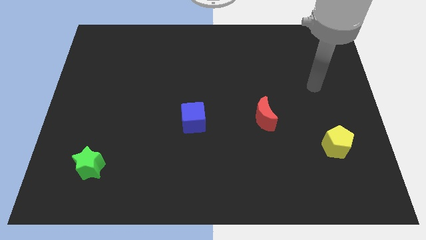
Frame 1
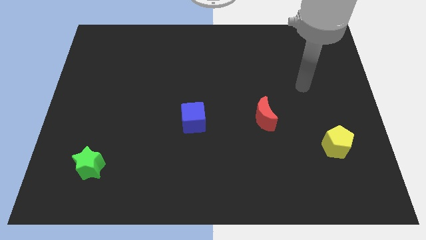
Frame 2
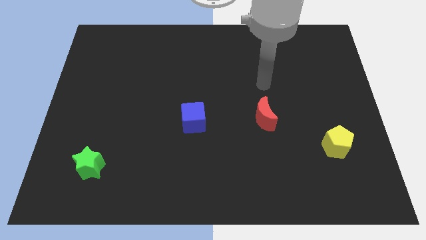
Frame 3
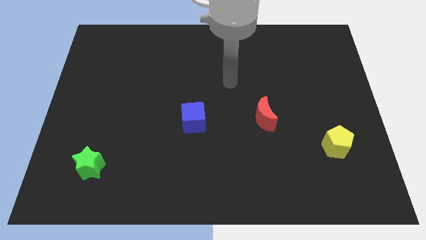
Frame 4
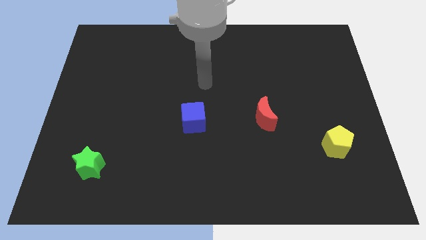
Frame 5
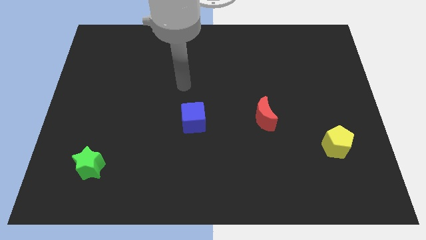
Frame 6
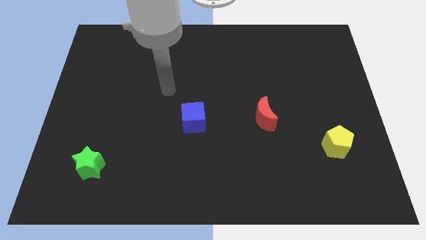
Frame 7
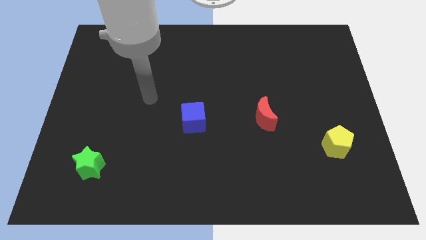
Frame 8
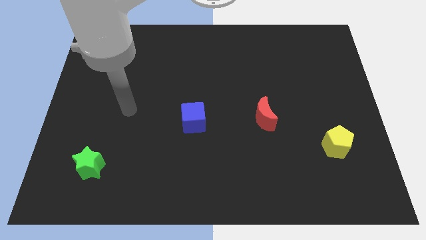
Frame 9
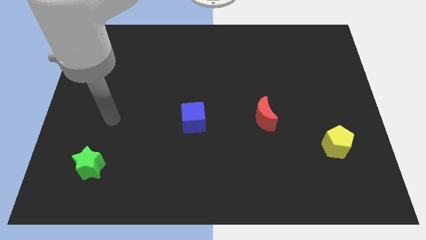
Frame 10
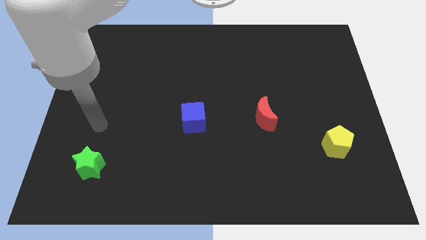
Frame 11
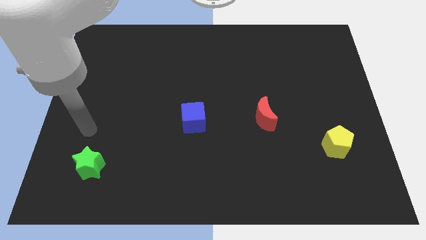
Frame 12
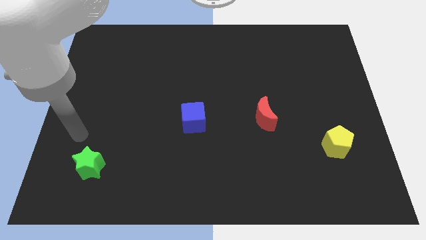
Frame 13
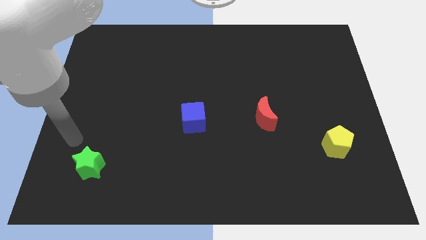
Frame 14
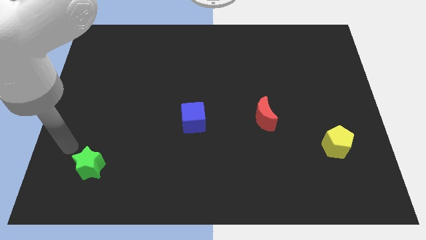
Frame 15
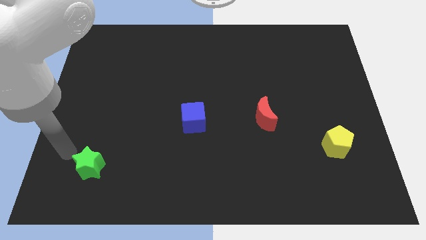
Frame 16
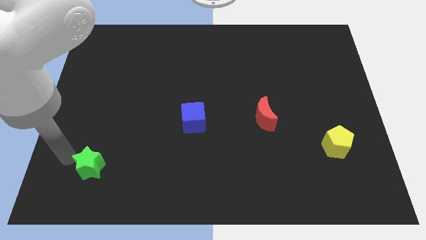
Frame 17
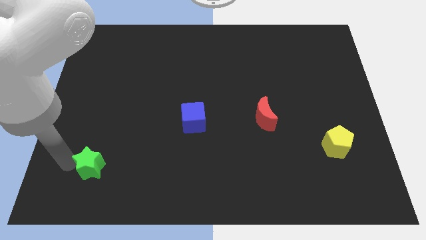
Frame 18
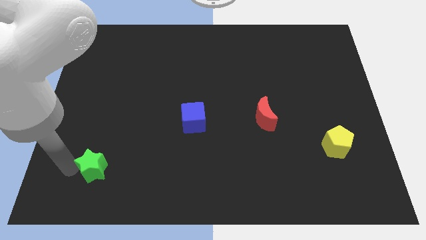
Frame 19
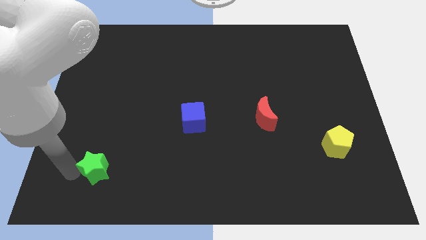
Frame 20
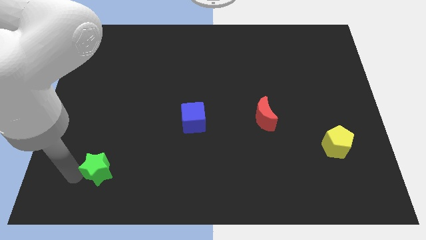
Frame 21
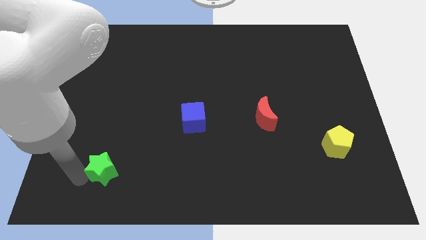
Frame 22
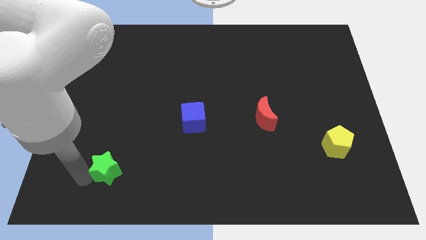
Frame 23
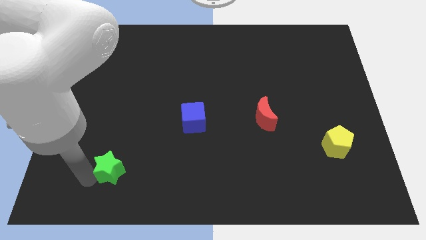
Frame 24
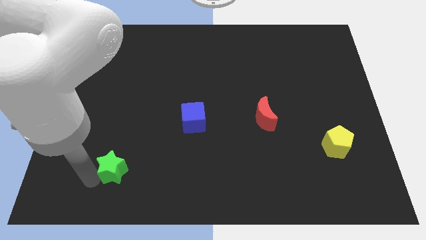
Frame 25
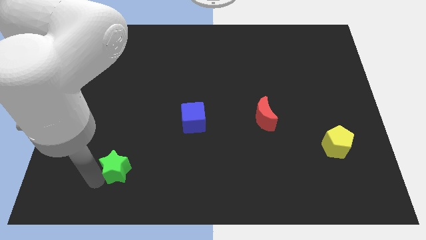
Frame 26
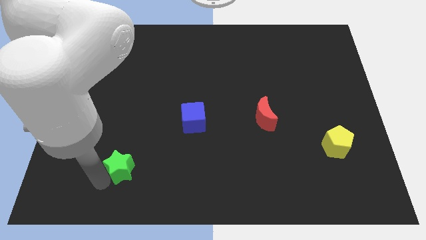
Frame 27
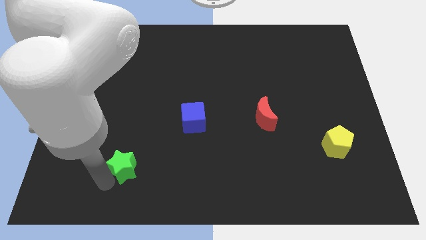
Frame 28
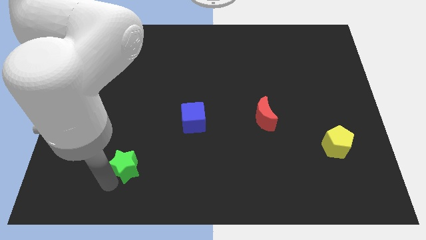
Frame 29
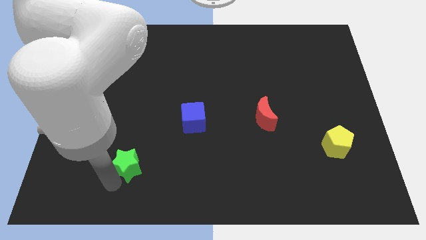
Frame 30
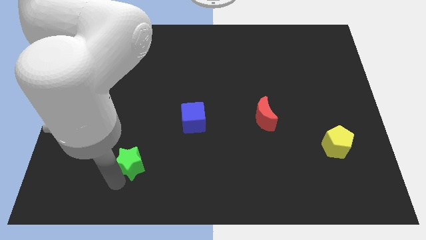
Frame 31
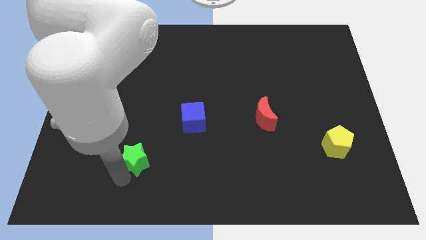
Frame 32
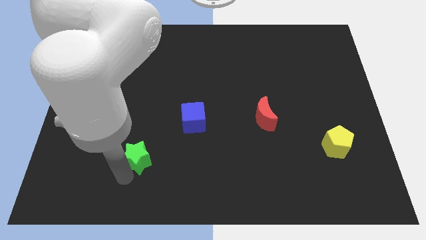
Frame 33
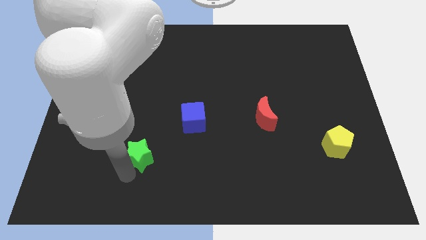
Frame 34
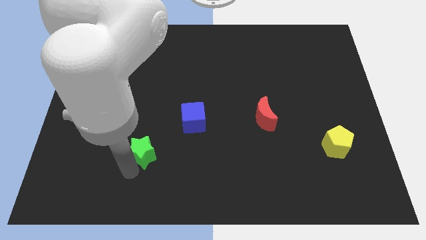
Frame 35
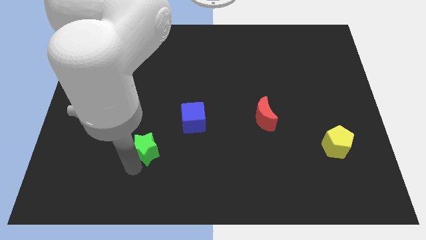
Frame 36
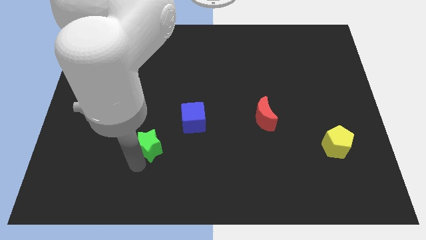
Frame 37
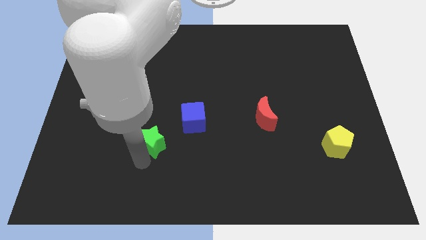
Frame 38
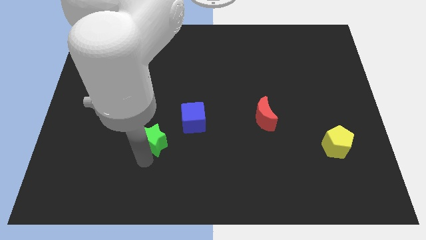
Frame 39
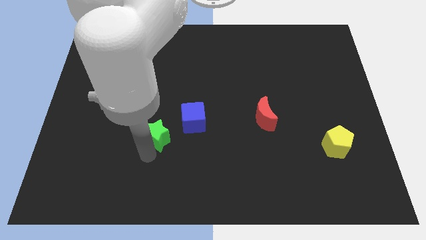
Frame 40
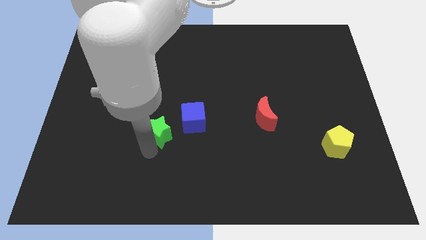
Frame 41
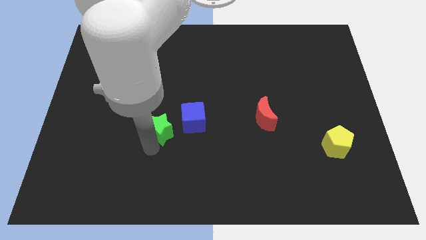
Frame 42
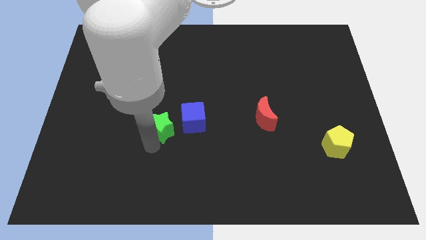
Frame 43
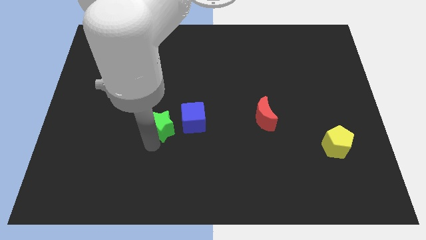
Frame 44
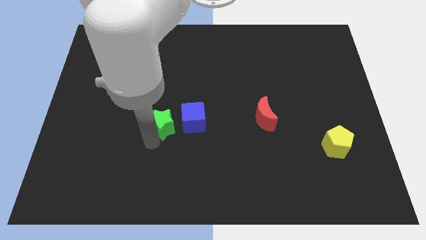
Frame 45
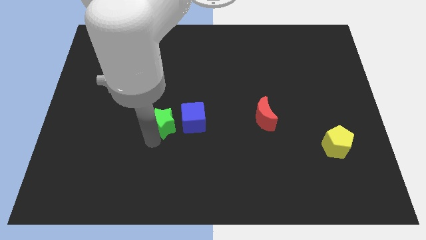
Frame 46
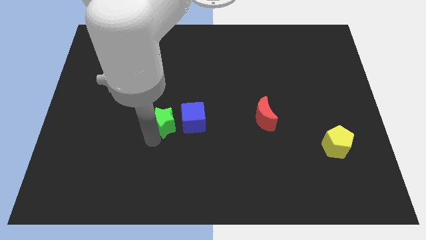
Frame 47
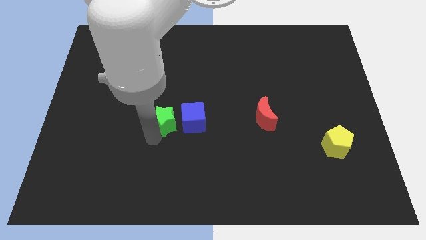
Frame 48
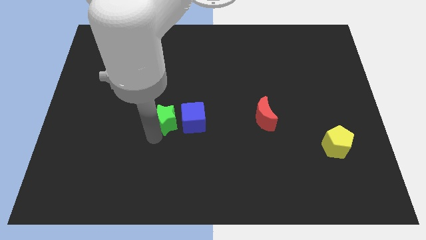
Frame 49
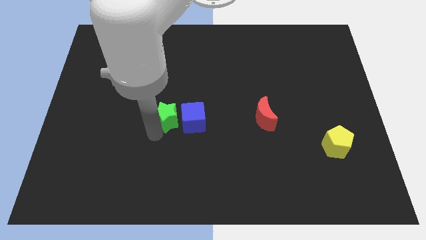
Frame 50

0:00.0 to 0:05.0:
push the green star close to the blue cube

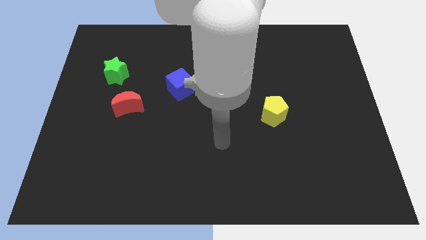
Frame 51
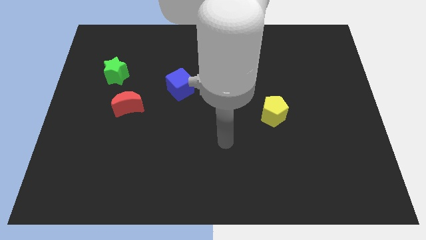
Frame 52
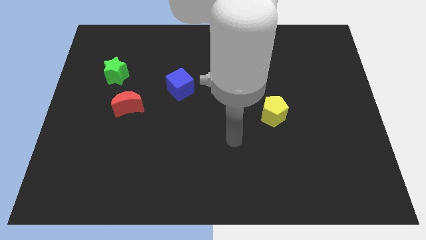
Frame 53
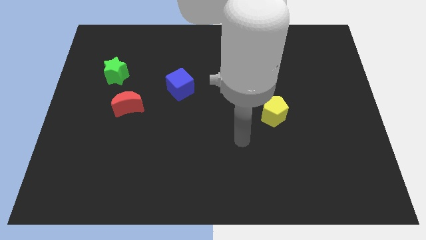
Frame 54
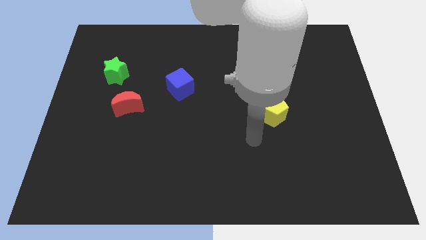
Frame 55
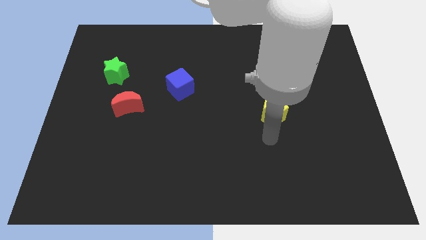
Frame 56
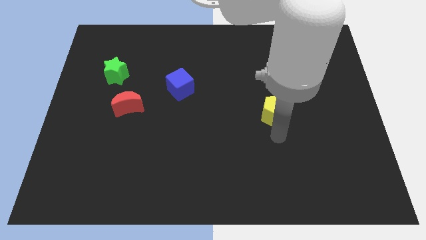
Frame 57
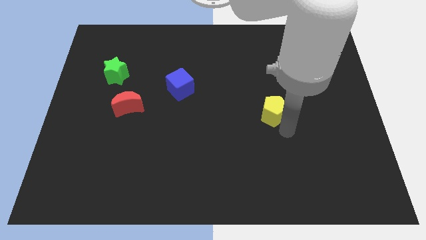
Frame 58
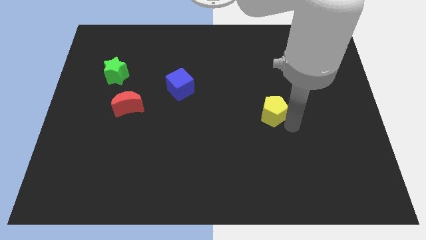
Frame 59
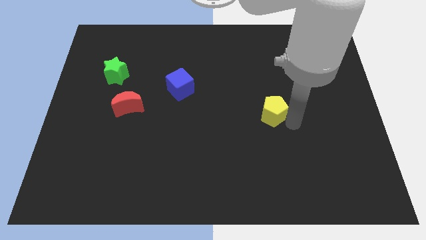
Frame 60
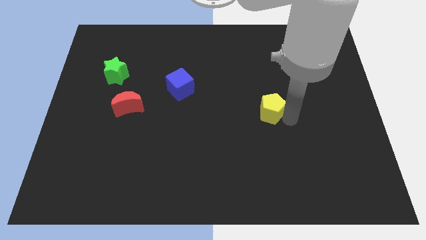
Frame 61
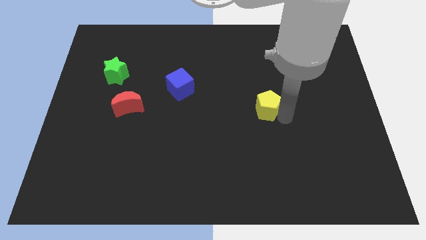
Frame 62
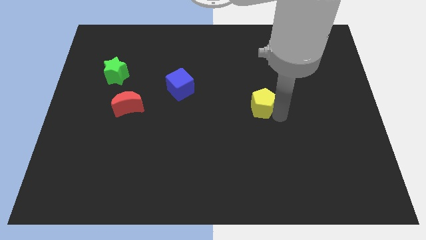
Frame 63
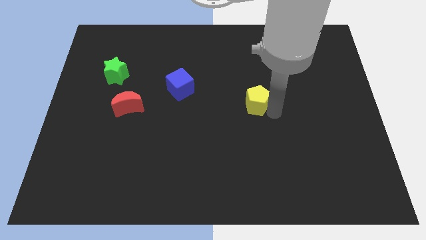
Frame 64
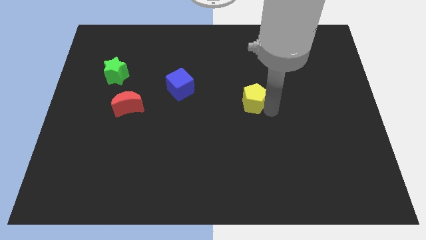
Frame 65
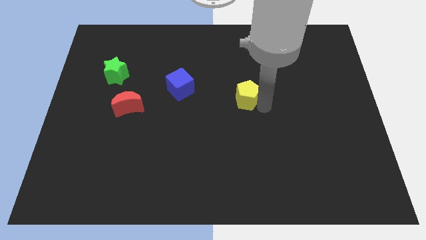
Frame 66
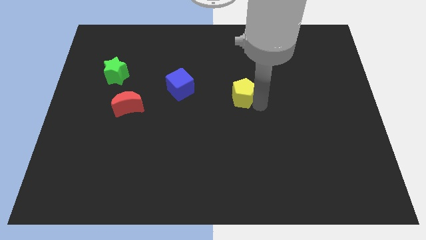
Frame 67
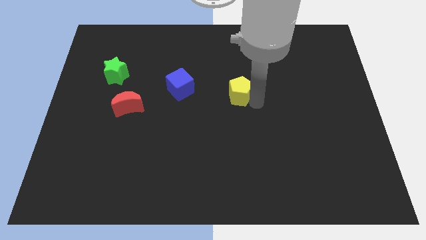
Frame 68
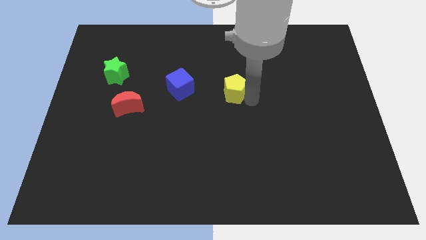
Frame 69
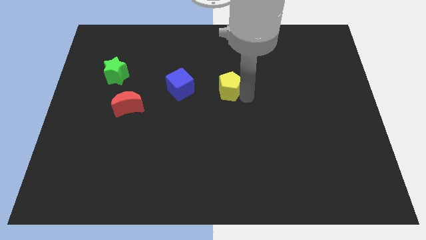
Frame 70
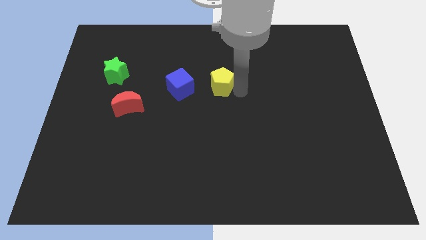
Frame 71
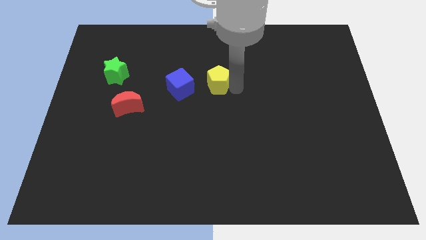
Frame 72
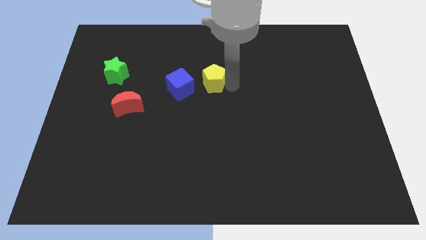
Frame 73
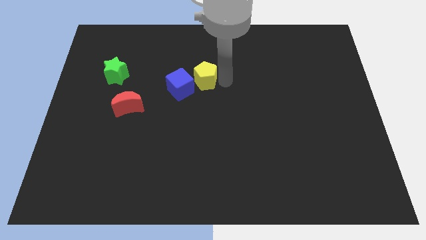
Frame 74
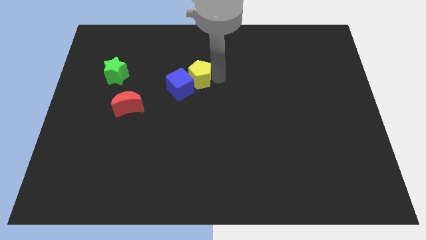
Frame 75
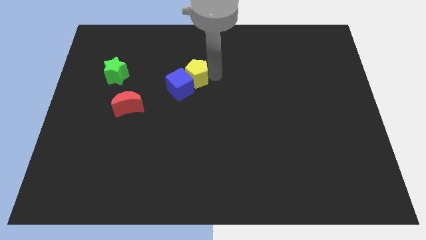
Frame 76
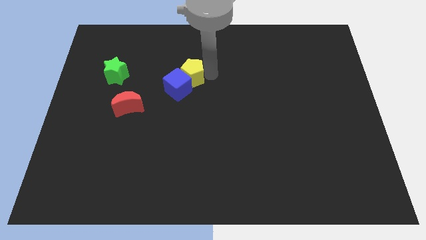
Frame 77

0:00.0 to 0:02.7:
move the yellow pentagon next to the cube

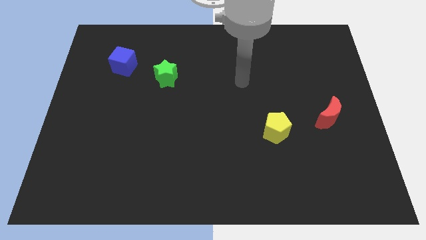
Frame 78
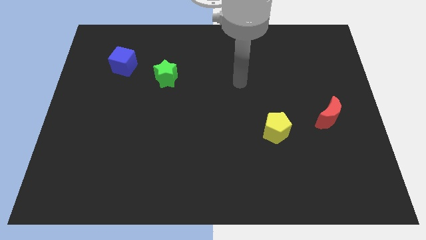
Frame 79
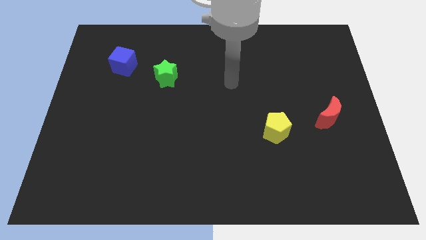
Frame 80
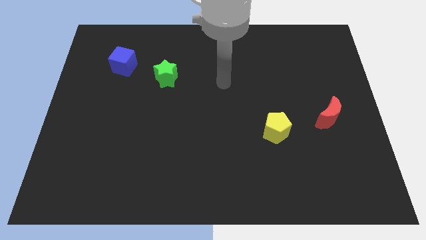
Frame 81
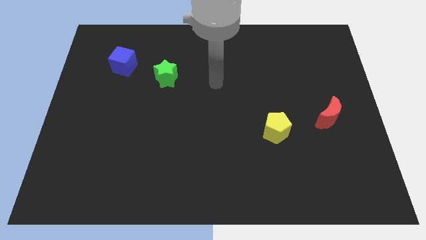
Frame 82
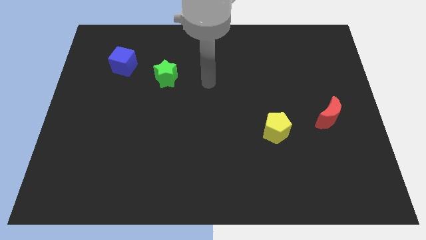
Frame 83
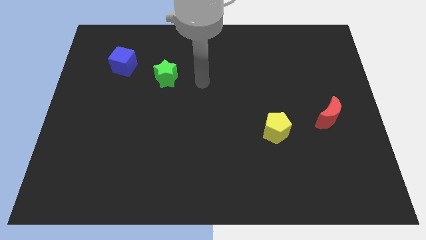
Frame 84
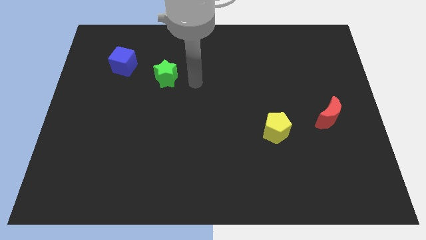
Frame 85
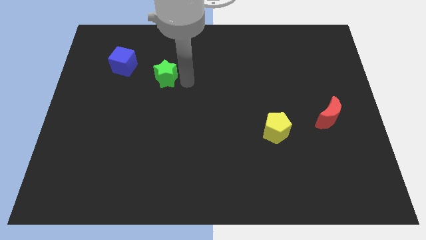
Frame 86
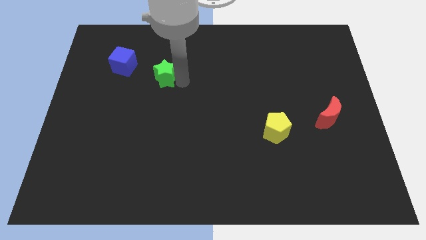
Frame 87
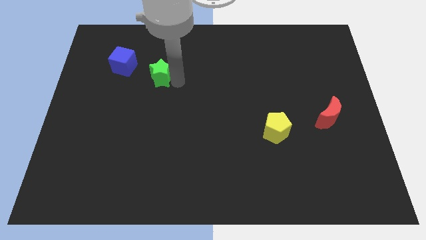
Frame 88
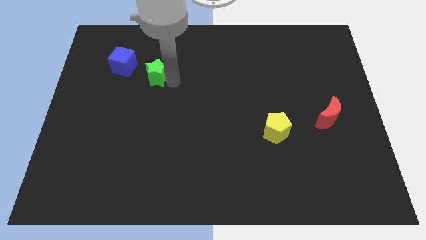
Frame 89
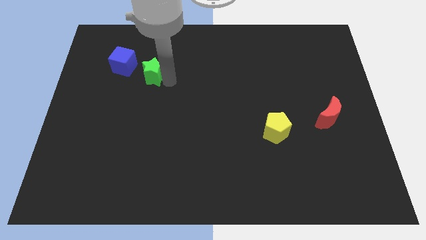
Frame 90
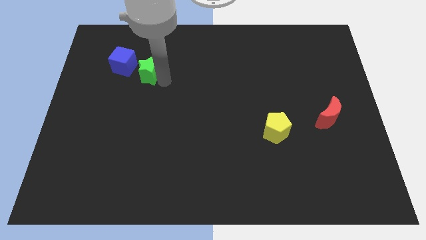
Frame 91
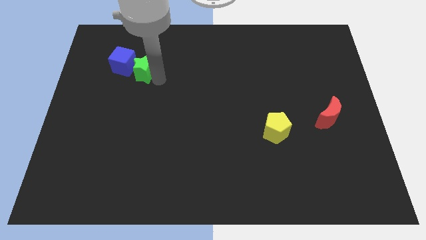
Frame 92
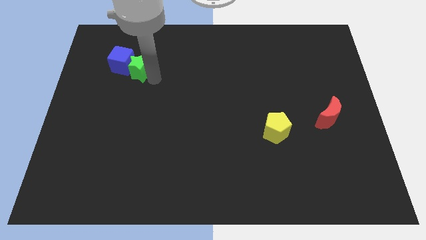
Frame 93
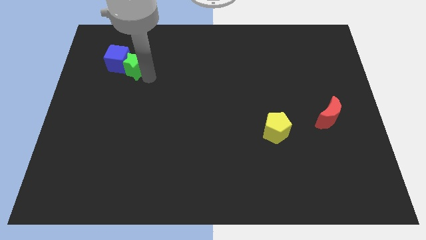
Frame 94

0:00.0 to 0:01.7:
move the green block to the blue cube
